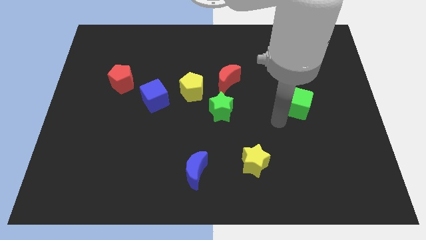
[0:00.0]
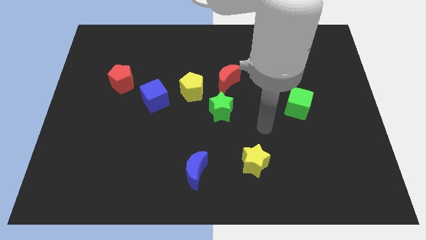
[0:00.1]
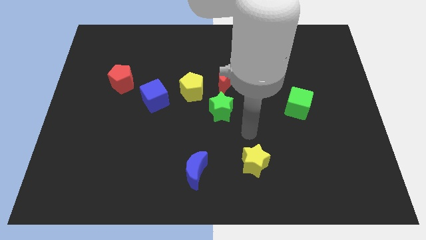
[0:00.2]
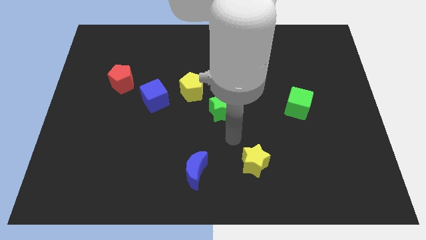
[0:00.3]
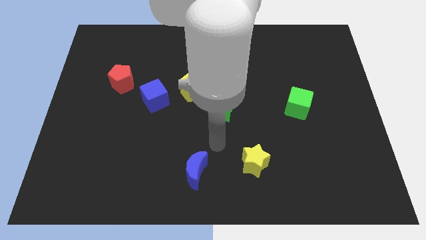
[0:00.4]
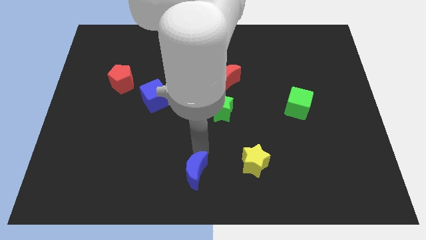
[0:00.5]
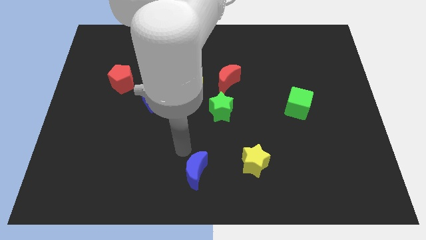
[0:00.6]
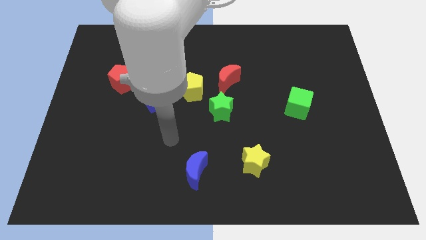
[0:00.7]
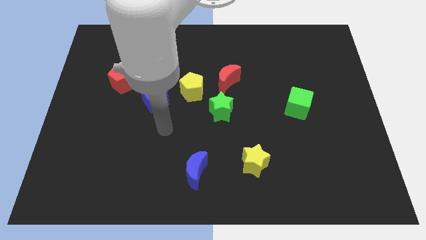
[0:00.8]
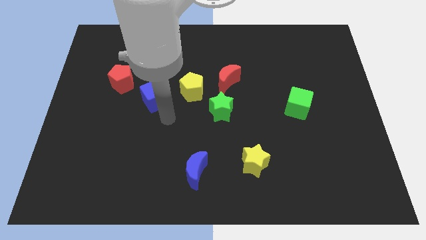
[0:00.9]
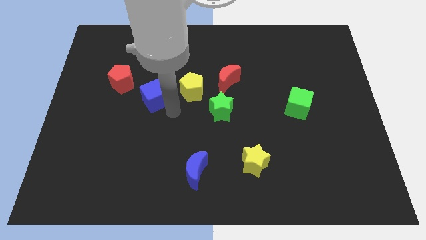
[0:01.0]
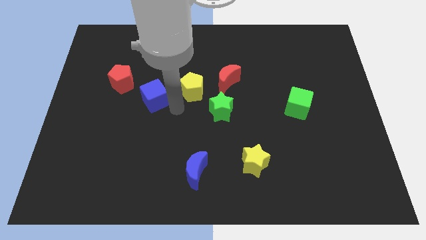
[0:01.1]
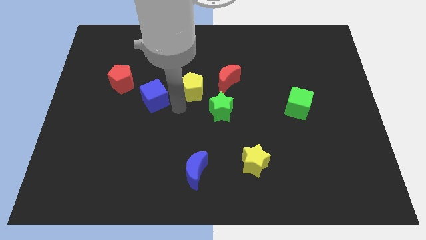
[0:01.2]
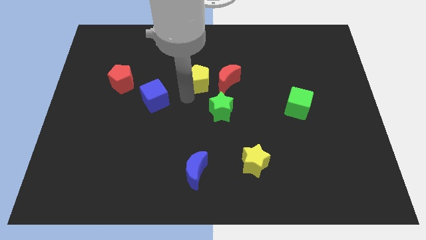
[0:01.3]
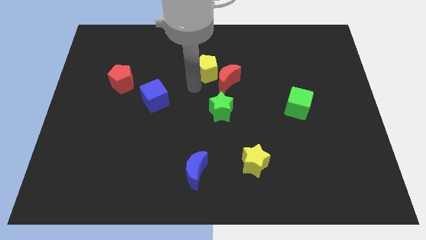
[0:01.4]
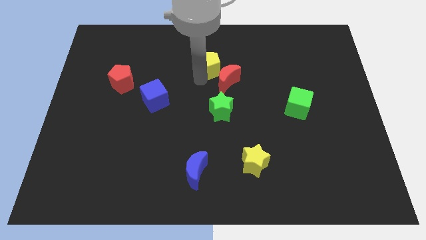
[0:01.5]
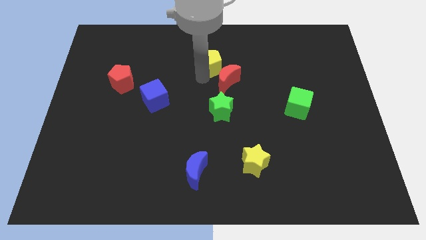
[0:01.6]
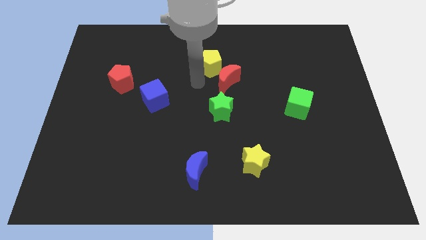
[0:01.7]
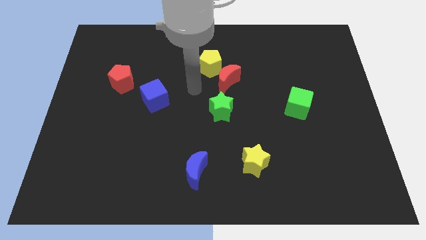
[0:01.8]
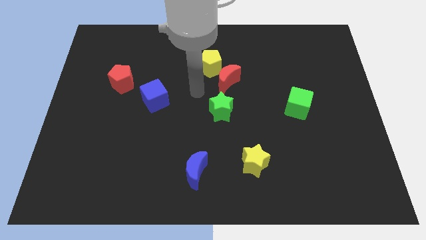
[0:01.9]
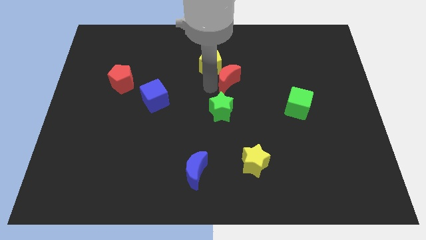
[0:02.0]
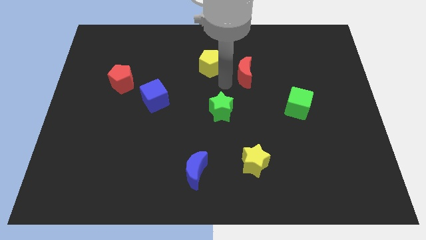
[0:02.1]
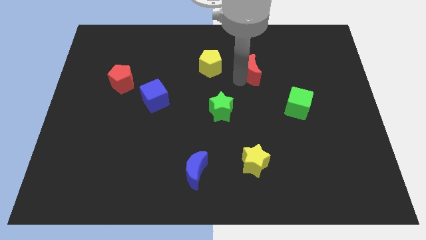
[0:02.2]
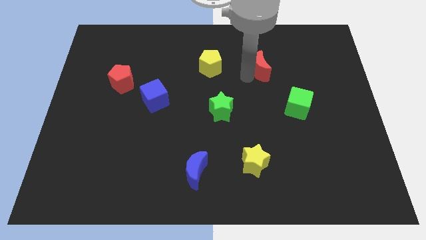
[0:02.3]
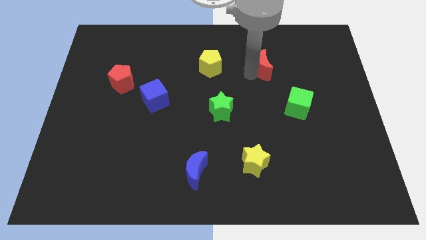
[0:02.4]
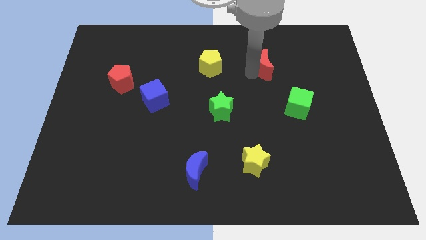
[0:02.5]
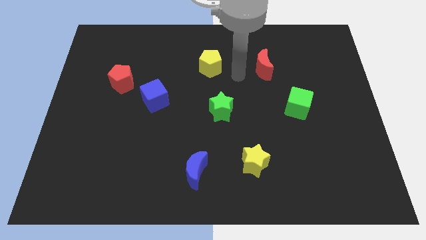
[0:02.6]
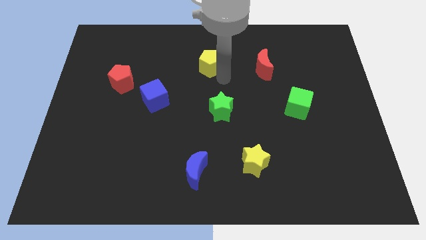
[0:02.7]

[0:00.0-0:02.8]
place the yellow pentagon and red crescent in a horizontal line above the green star

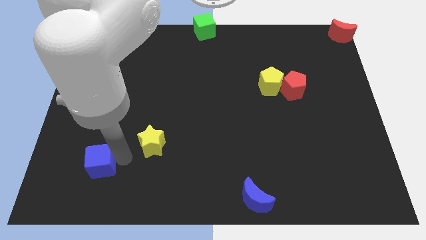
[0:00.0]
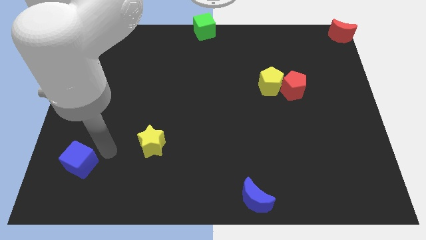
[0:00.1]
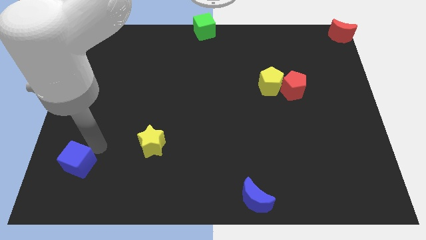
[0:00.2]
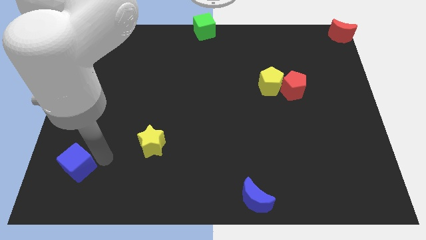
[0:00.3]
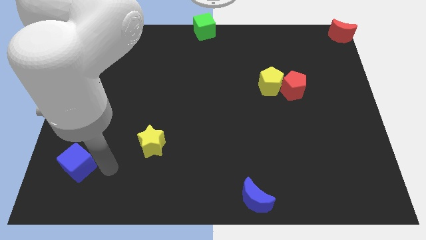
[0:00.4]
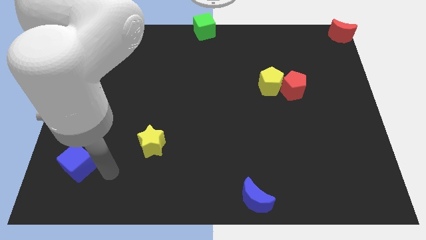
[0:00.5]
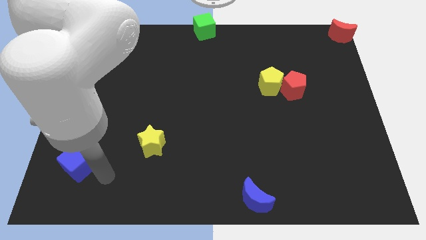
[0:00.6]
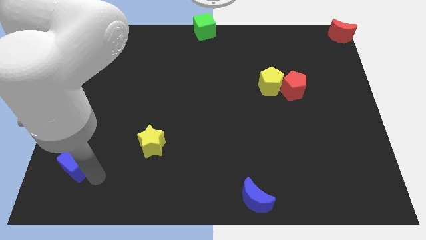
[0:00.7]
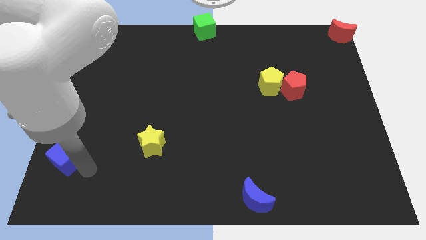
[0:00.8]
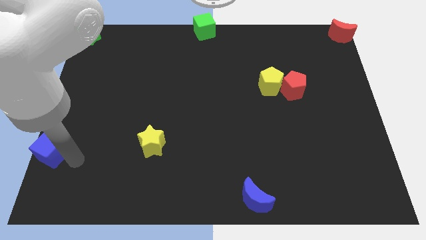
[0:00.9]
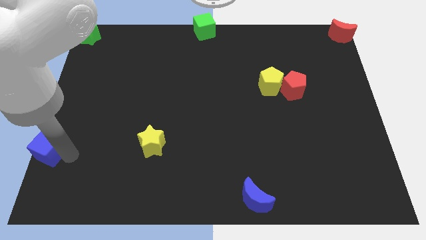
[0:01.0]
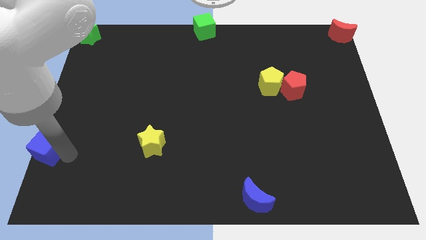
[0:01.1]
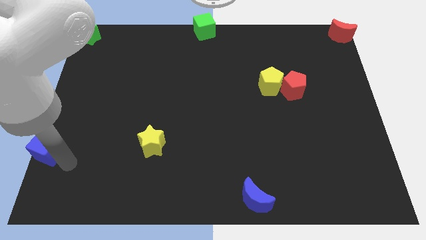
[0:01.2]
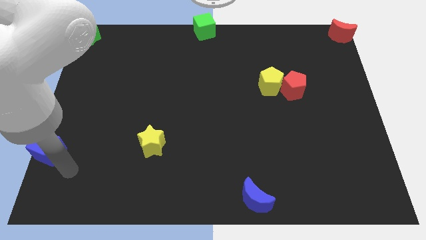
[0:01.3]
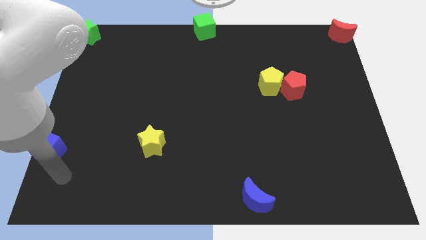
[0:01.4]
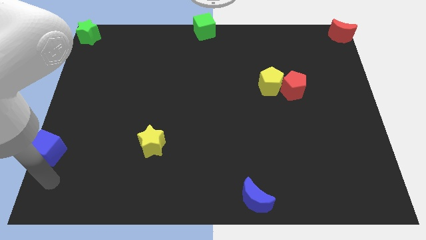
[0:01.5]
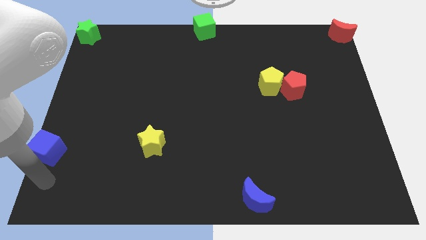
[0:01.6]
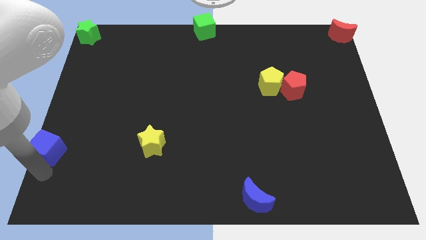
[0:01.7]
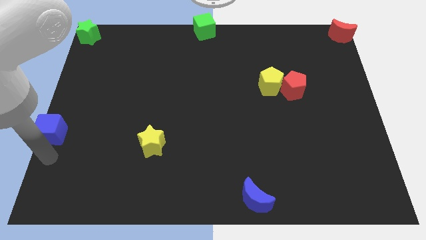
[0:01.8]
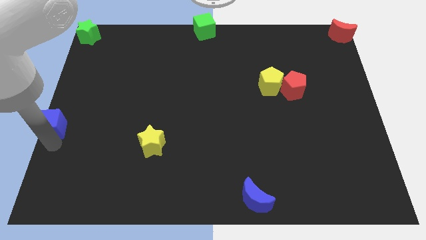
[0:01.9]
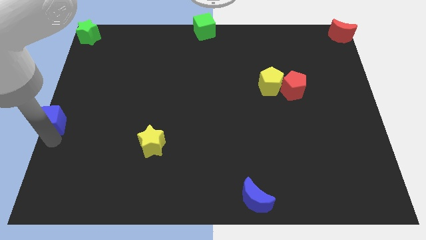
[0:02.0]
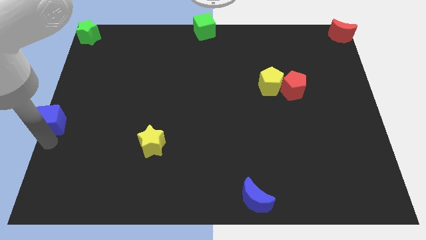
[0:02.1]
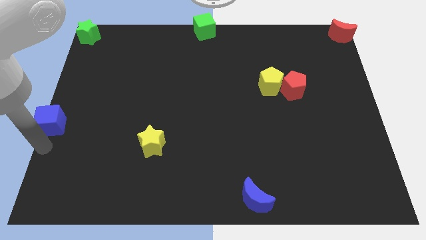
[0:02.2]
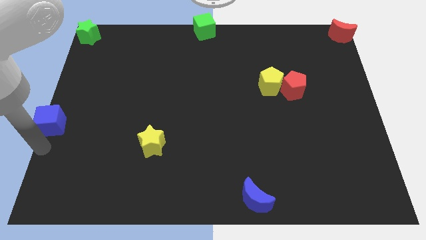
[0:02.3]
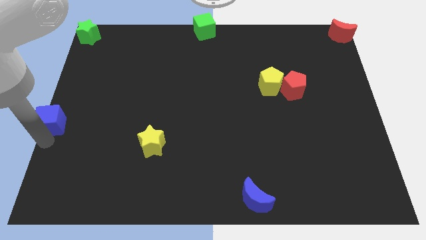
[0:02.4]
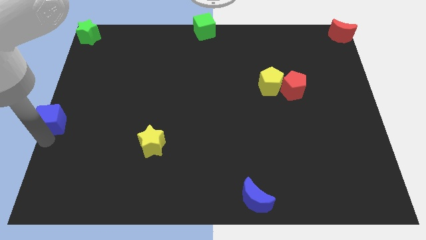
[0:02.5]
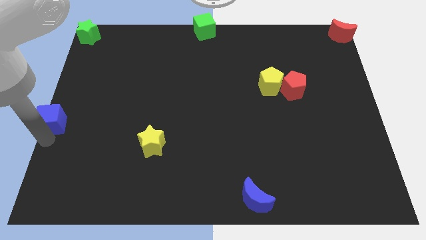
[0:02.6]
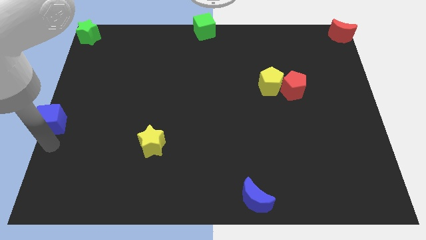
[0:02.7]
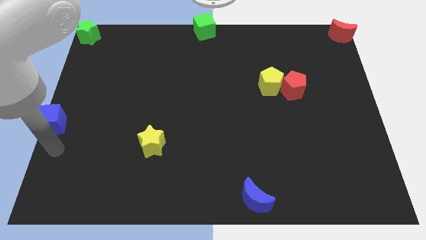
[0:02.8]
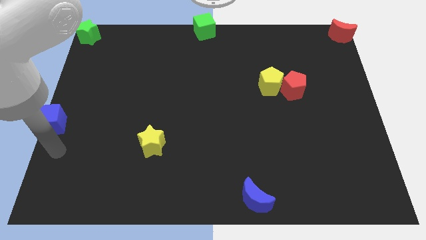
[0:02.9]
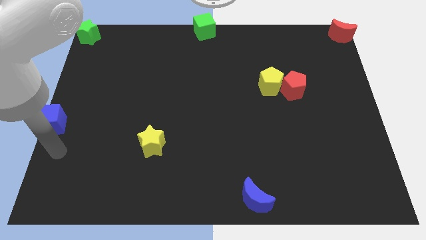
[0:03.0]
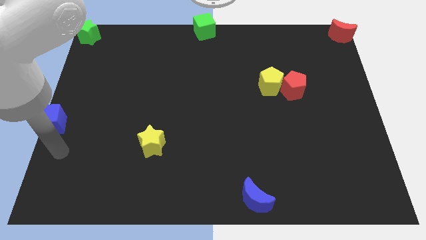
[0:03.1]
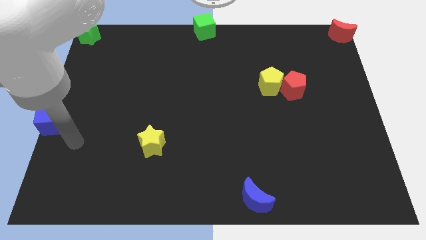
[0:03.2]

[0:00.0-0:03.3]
move the blue cube to the left center of the board

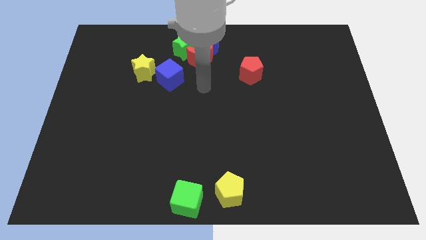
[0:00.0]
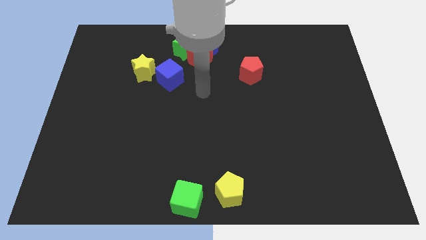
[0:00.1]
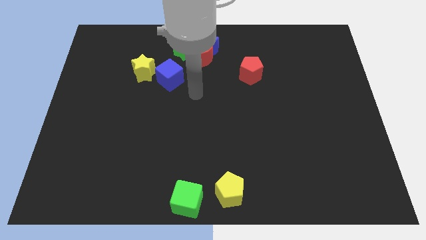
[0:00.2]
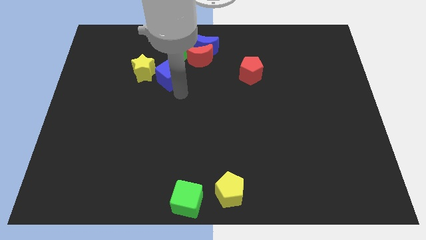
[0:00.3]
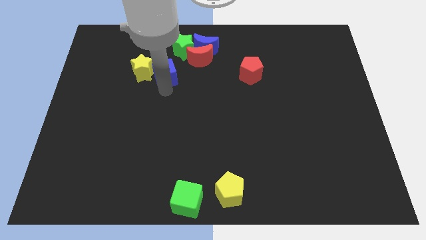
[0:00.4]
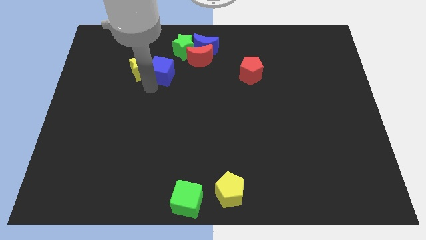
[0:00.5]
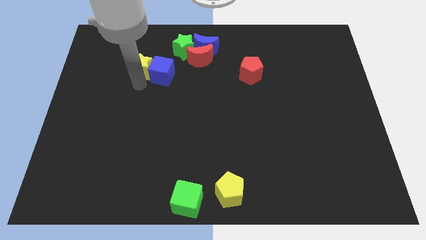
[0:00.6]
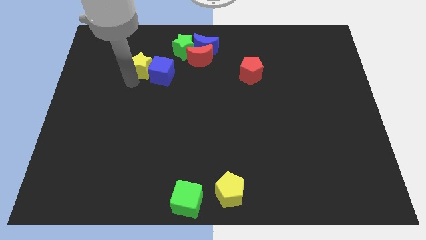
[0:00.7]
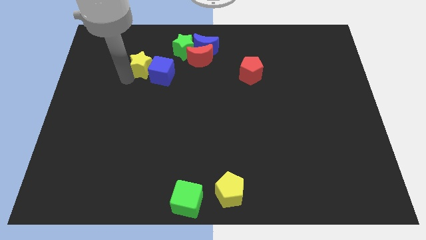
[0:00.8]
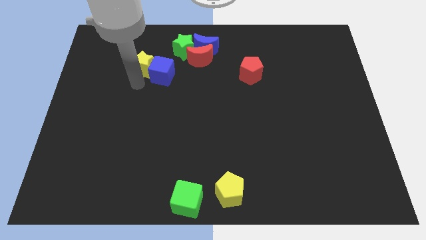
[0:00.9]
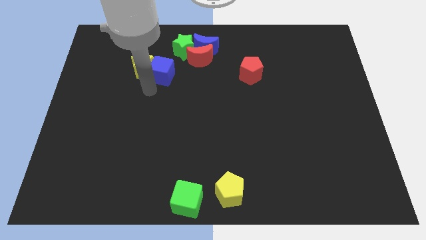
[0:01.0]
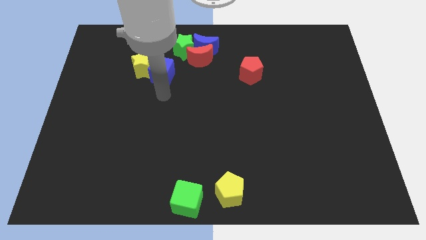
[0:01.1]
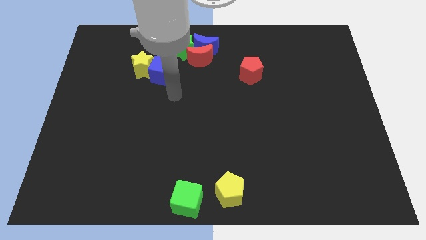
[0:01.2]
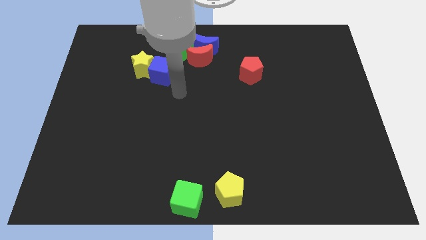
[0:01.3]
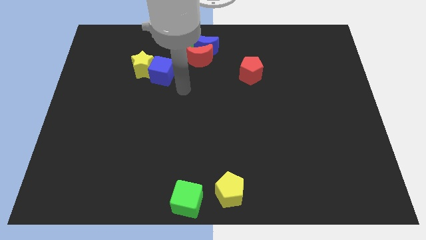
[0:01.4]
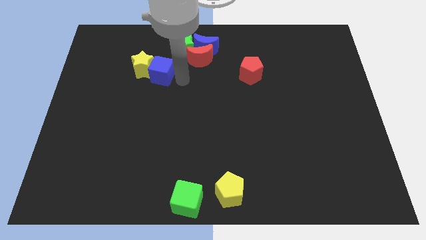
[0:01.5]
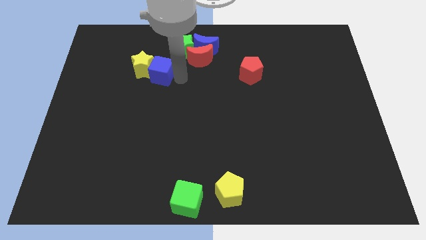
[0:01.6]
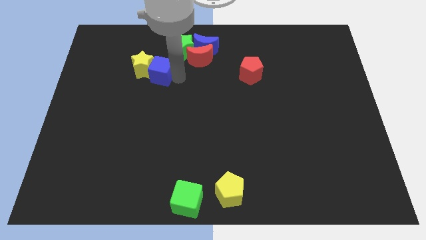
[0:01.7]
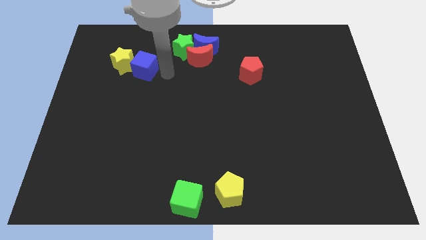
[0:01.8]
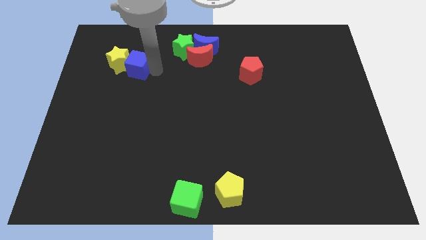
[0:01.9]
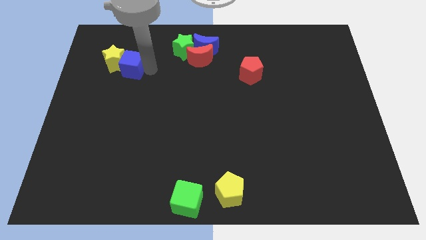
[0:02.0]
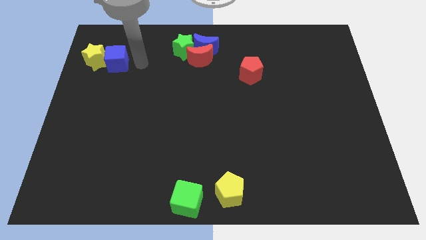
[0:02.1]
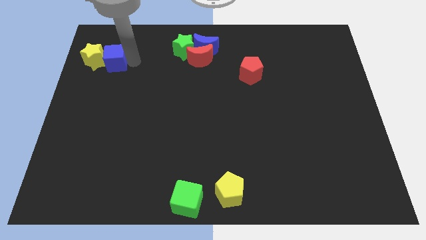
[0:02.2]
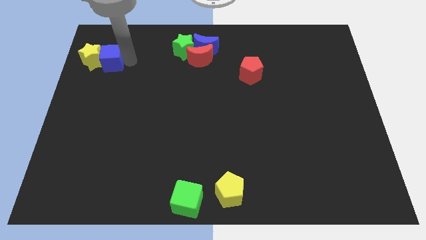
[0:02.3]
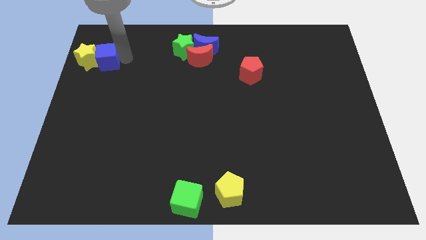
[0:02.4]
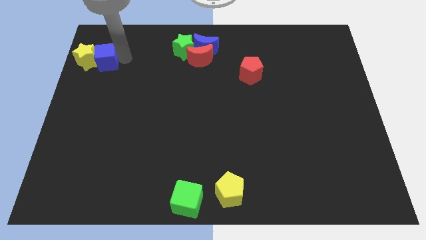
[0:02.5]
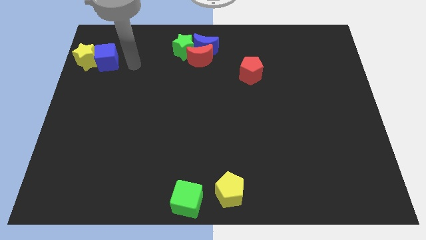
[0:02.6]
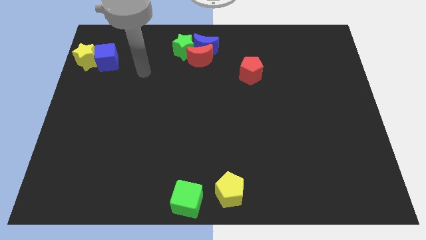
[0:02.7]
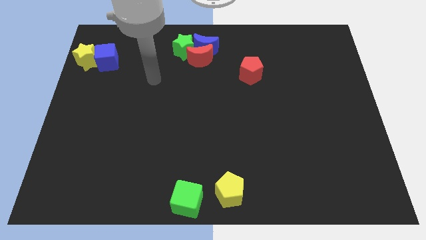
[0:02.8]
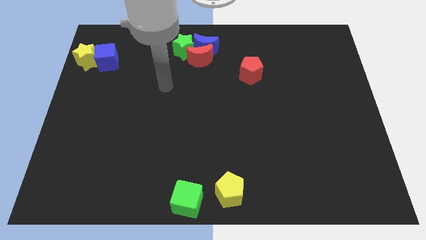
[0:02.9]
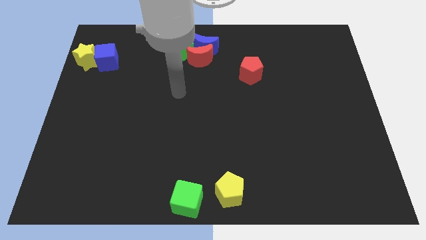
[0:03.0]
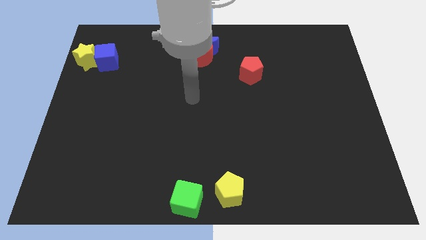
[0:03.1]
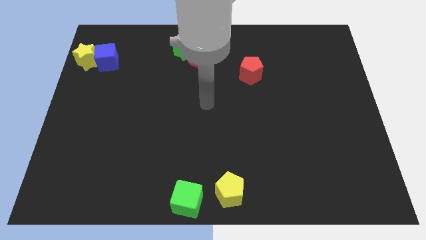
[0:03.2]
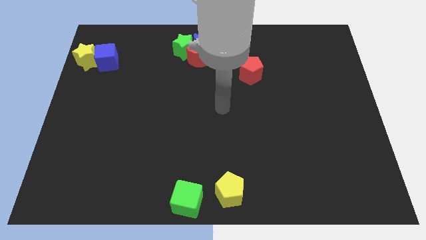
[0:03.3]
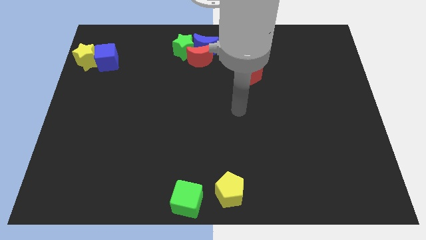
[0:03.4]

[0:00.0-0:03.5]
push blue cube and yellow star to the left side of the board
